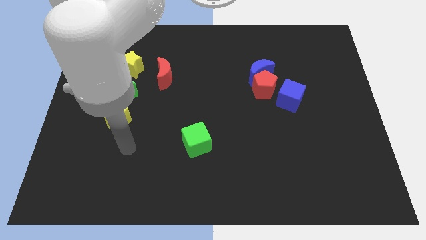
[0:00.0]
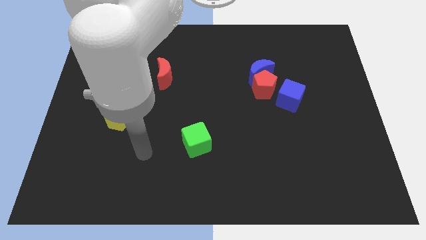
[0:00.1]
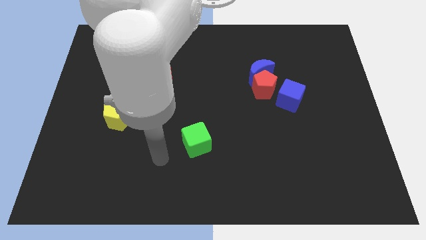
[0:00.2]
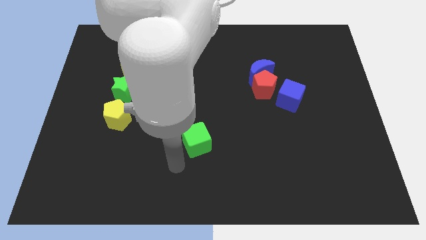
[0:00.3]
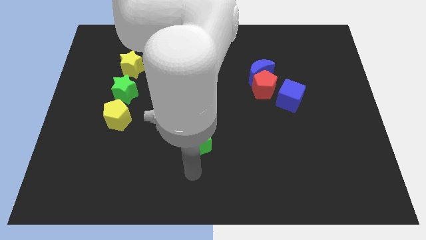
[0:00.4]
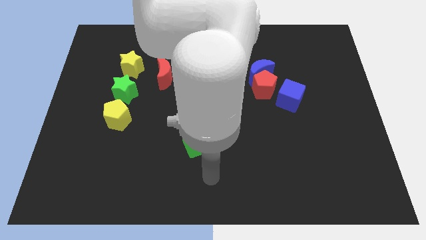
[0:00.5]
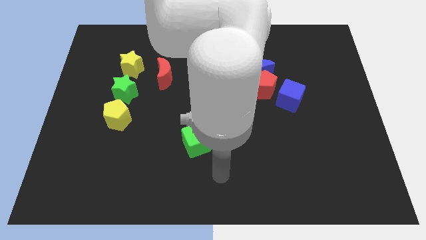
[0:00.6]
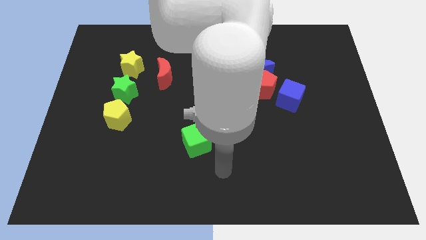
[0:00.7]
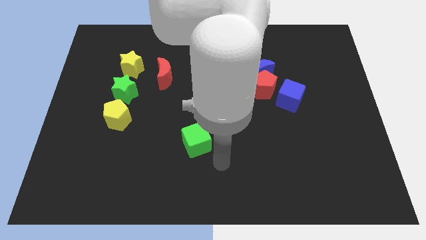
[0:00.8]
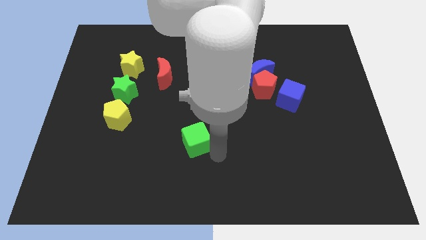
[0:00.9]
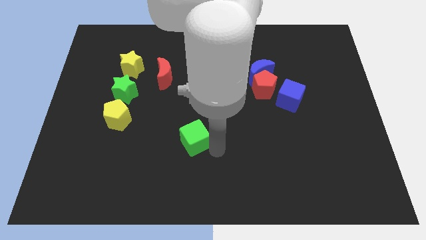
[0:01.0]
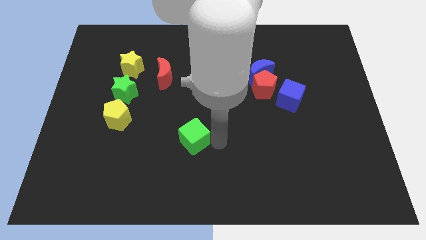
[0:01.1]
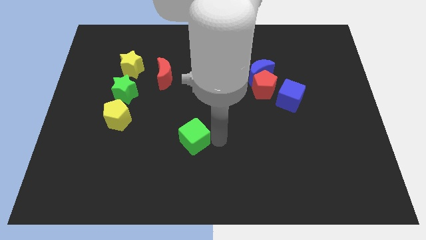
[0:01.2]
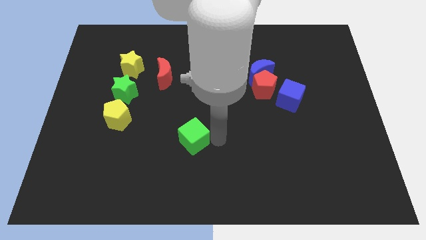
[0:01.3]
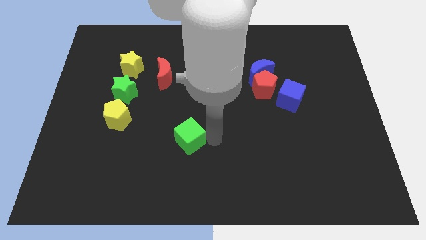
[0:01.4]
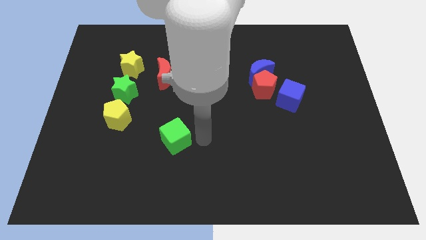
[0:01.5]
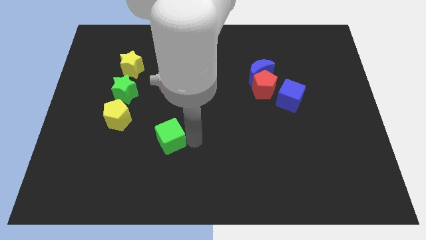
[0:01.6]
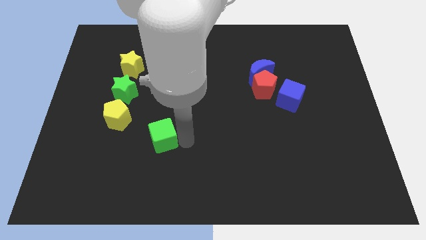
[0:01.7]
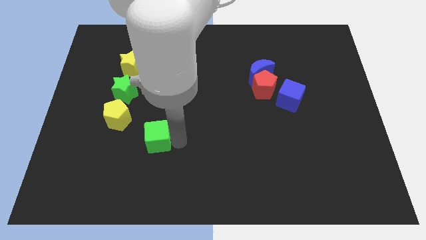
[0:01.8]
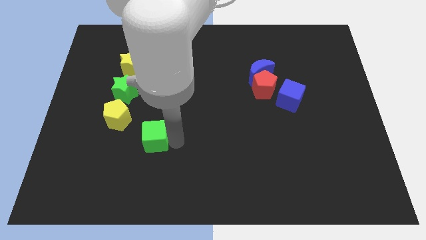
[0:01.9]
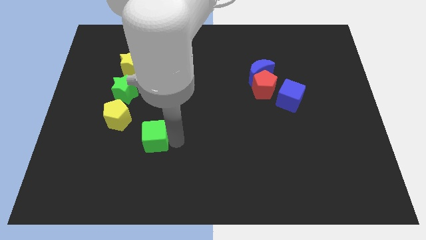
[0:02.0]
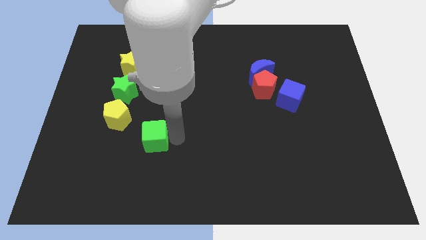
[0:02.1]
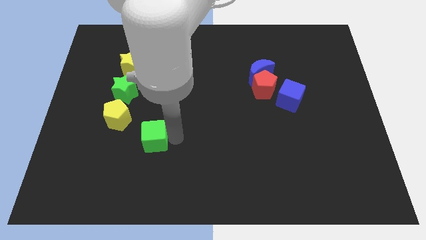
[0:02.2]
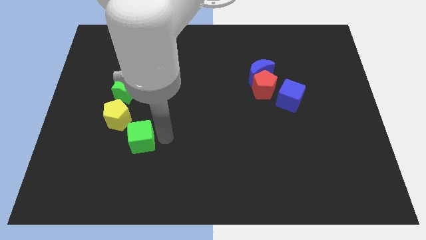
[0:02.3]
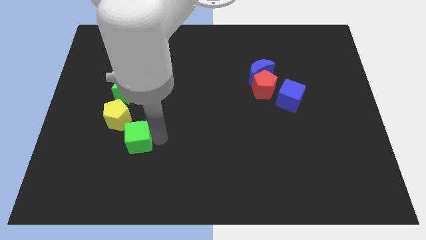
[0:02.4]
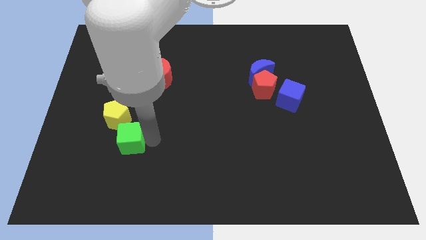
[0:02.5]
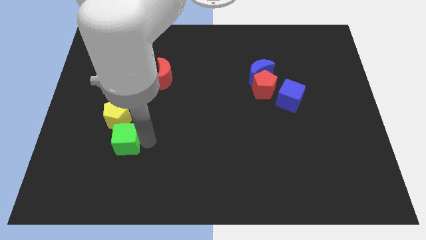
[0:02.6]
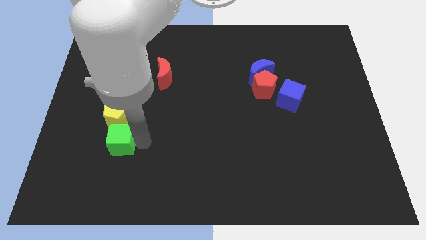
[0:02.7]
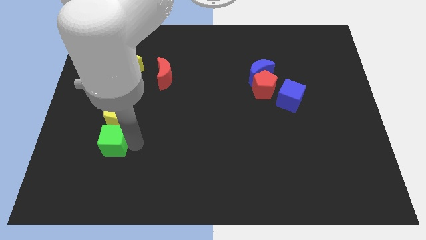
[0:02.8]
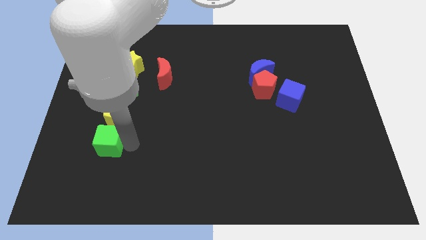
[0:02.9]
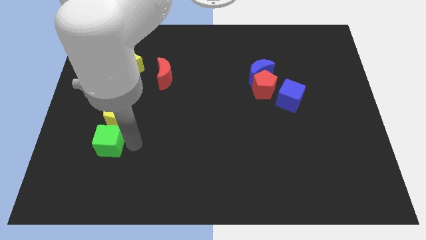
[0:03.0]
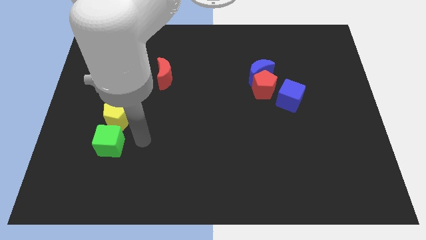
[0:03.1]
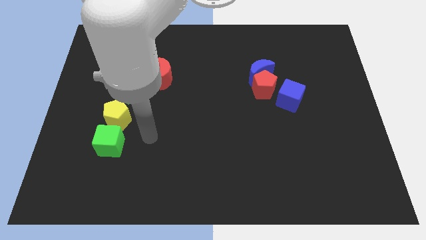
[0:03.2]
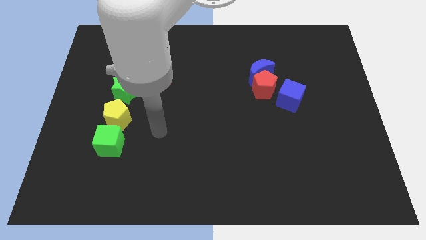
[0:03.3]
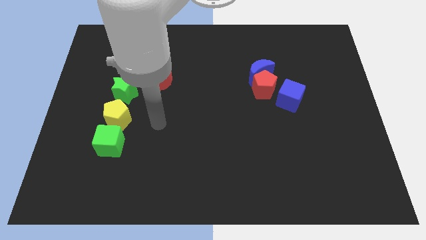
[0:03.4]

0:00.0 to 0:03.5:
put the green cube vertically below the yellow pentagon

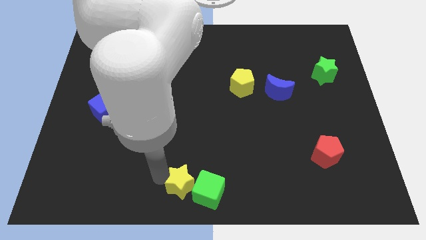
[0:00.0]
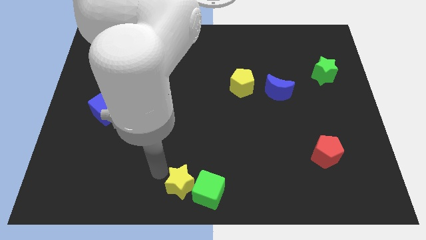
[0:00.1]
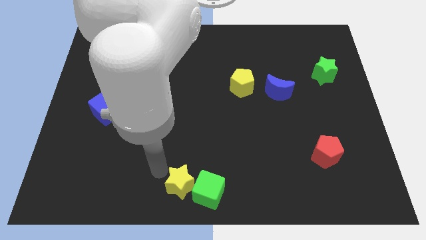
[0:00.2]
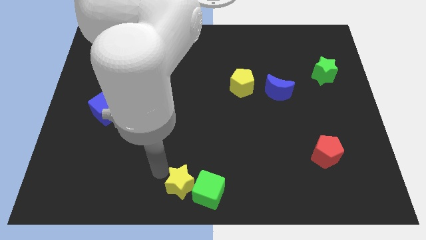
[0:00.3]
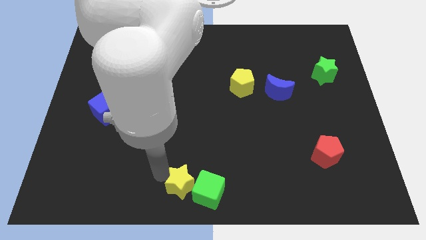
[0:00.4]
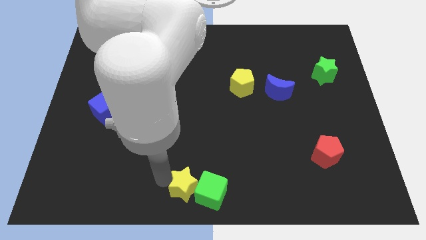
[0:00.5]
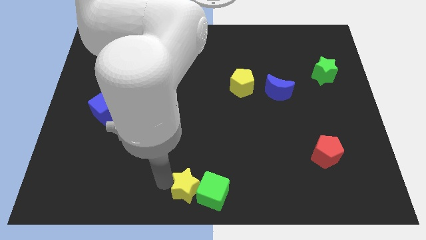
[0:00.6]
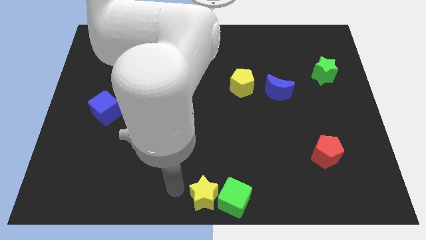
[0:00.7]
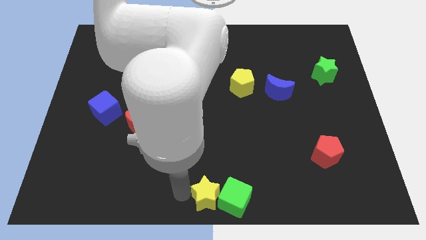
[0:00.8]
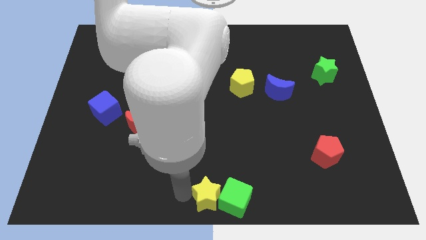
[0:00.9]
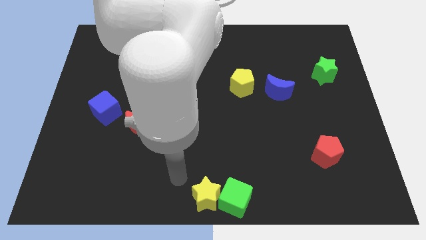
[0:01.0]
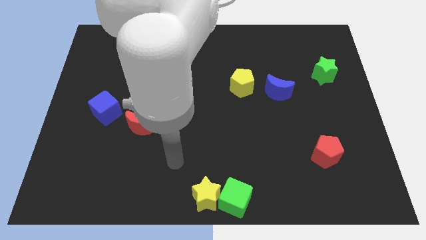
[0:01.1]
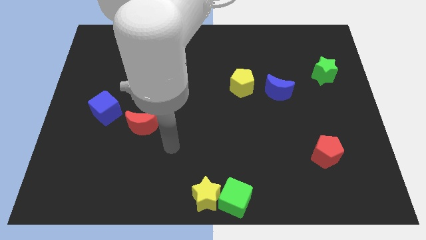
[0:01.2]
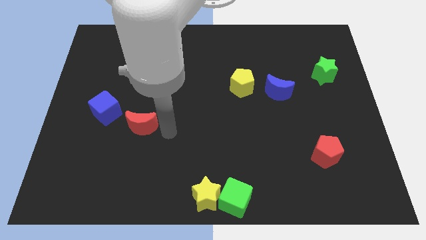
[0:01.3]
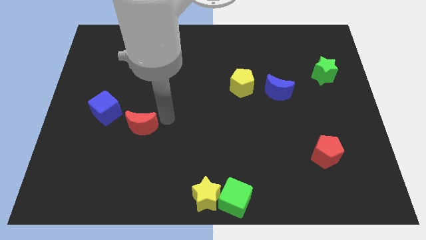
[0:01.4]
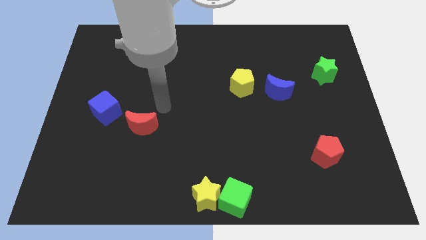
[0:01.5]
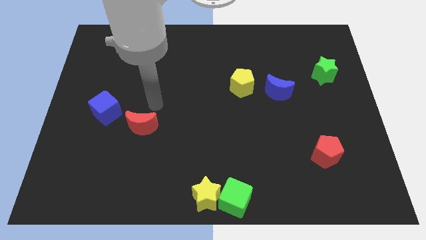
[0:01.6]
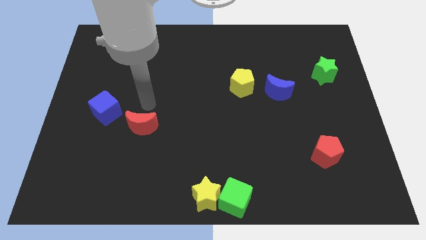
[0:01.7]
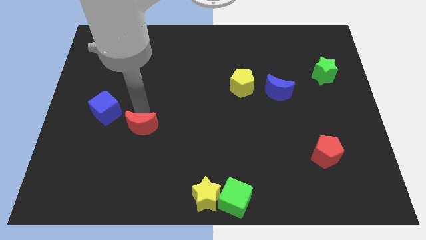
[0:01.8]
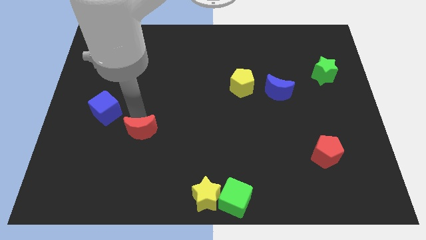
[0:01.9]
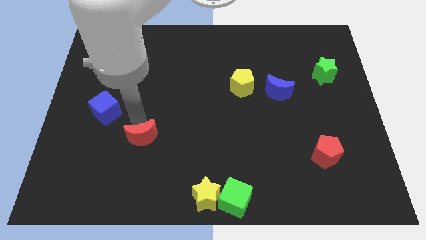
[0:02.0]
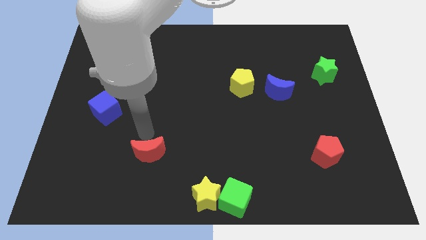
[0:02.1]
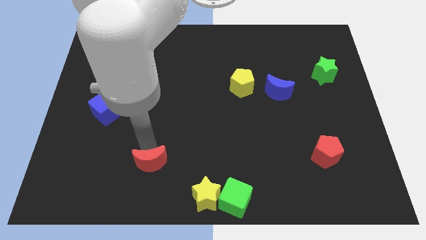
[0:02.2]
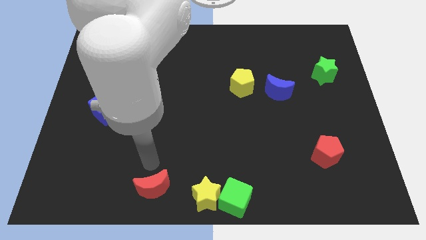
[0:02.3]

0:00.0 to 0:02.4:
push the red moon towards bottom side

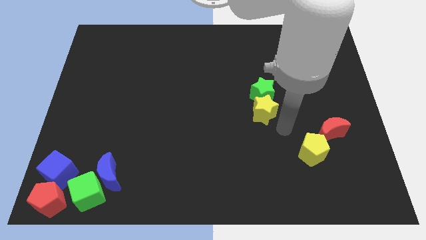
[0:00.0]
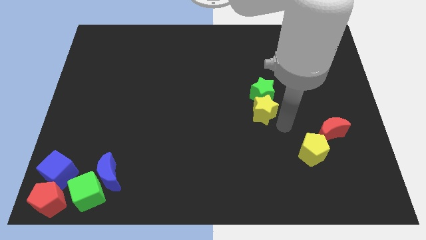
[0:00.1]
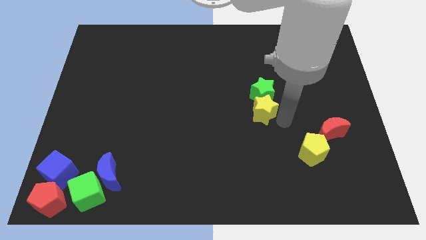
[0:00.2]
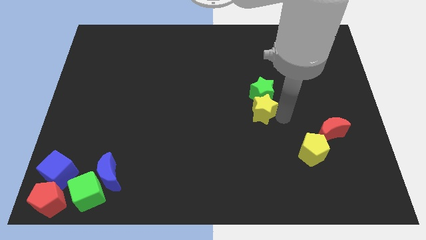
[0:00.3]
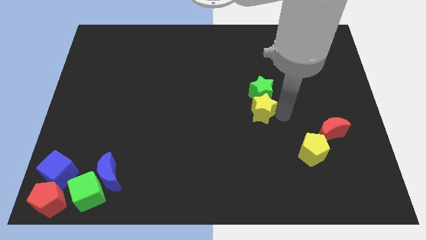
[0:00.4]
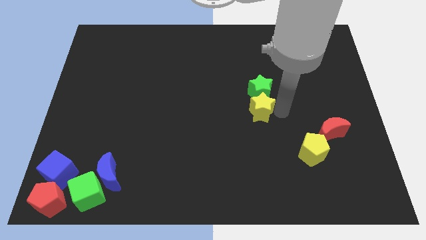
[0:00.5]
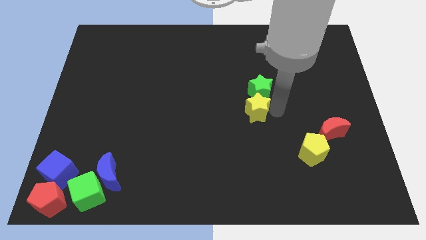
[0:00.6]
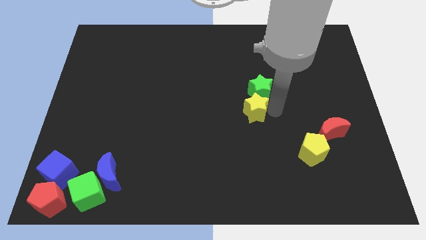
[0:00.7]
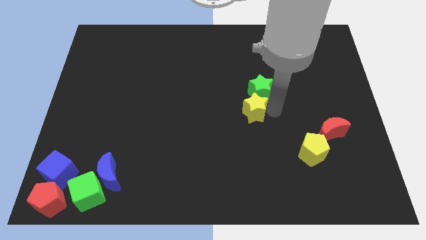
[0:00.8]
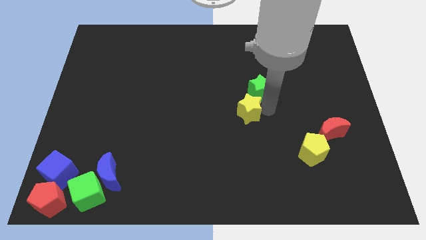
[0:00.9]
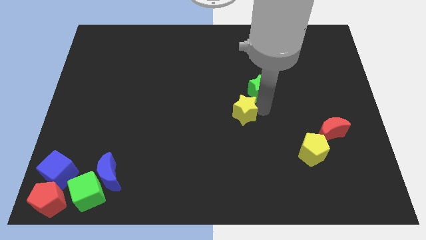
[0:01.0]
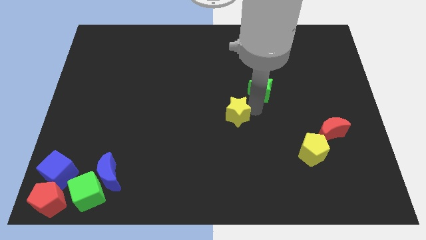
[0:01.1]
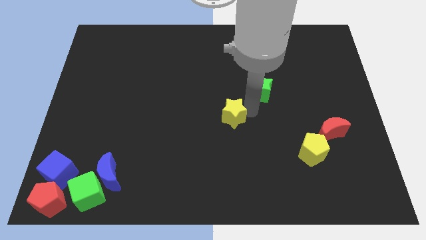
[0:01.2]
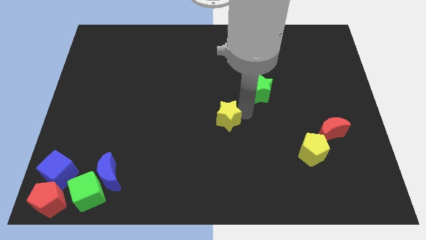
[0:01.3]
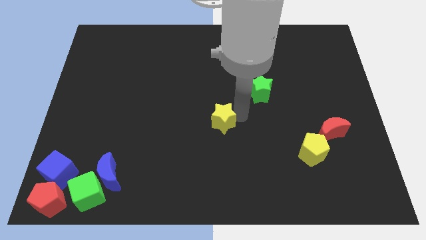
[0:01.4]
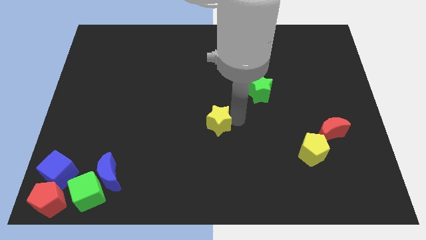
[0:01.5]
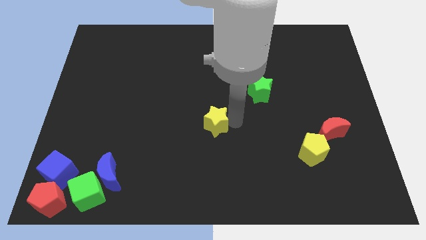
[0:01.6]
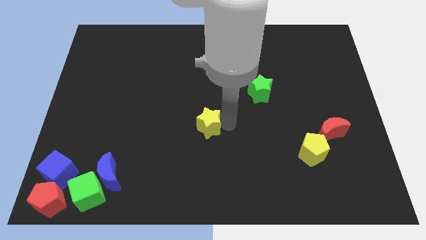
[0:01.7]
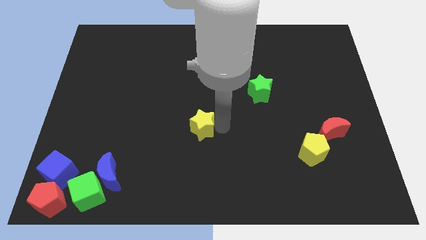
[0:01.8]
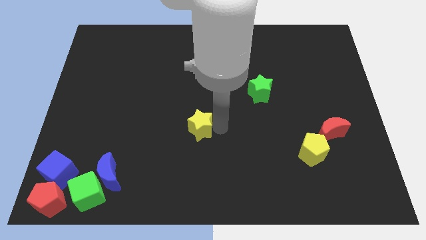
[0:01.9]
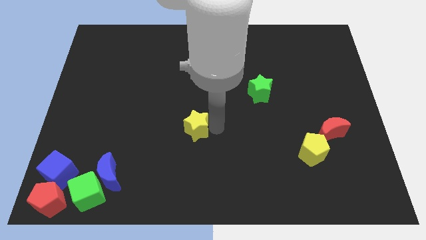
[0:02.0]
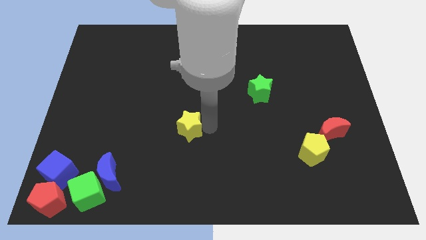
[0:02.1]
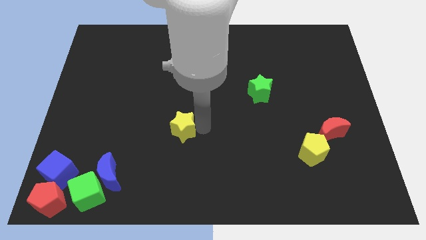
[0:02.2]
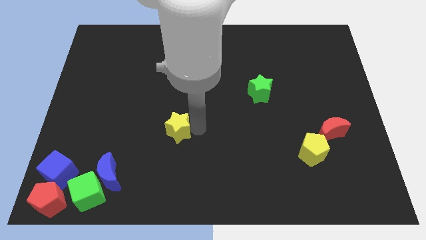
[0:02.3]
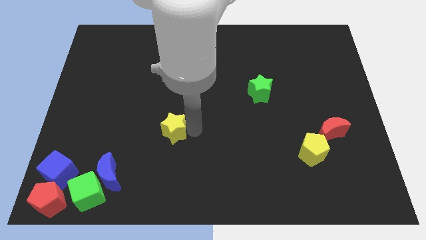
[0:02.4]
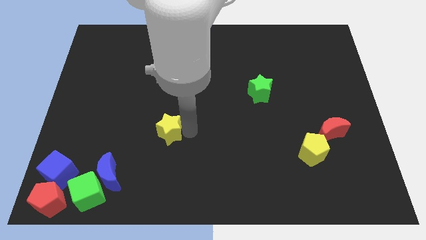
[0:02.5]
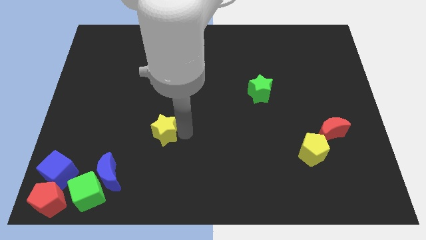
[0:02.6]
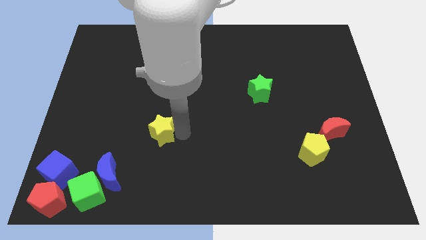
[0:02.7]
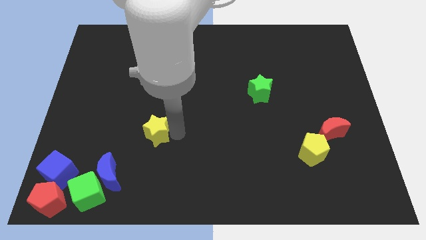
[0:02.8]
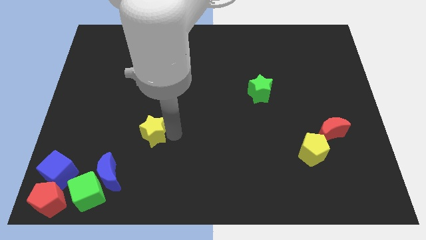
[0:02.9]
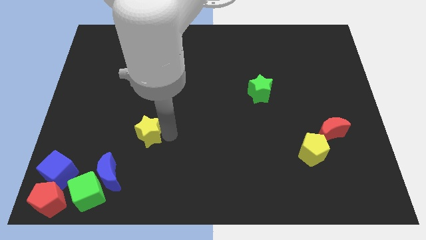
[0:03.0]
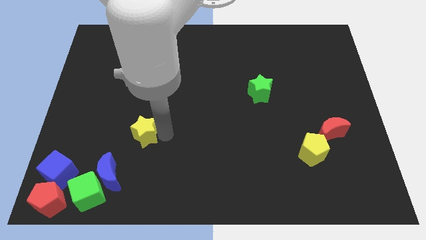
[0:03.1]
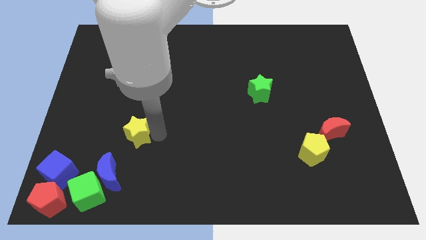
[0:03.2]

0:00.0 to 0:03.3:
push the yellow star towards the group of blocks
